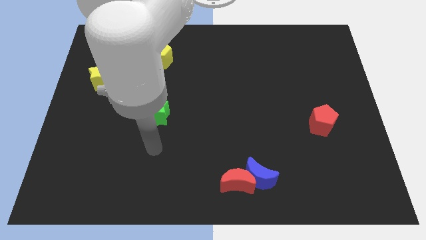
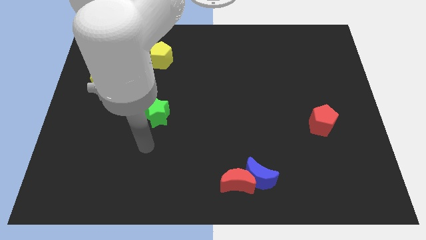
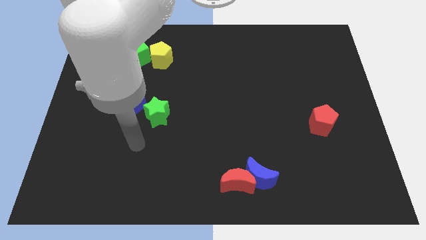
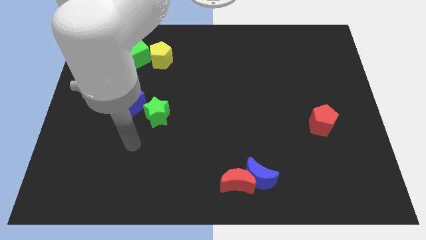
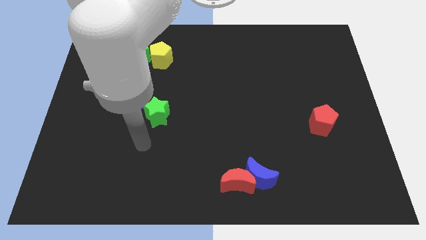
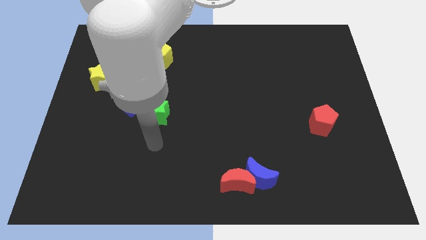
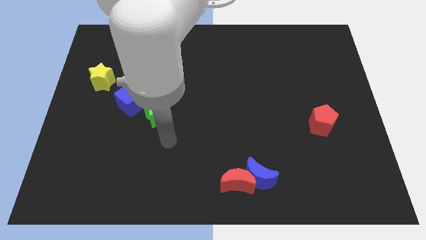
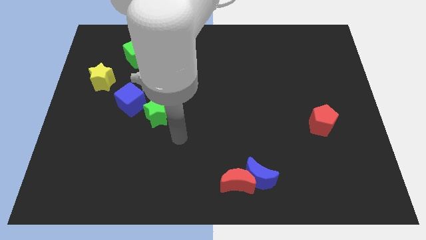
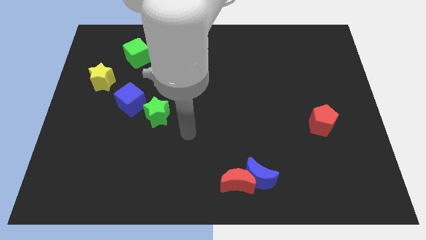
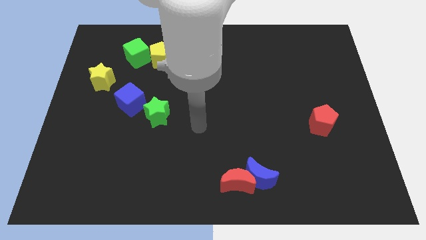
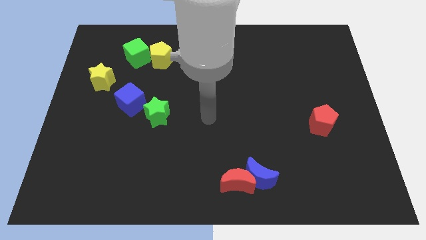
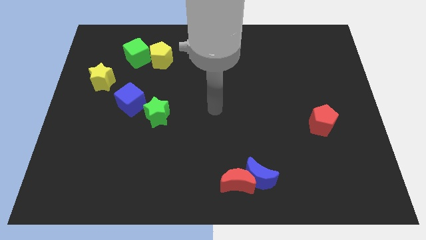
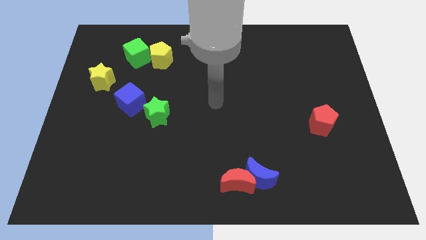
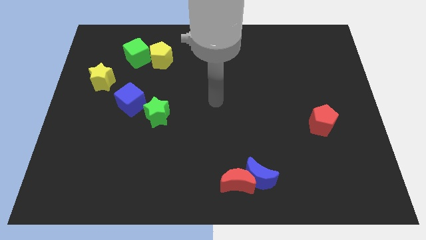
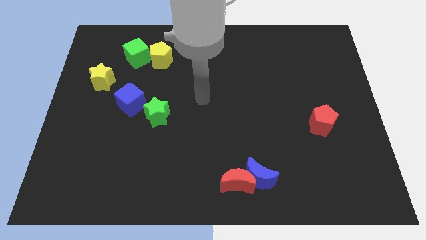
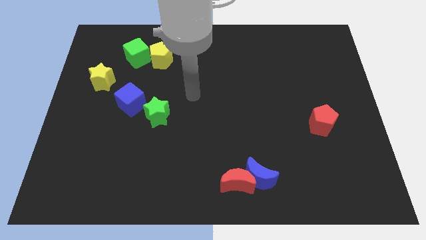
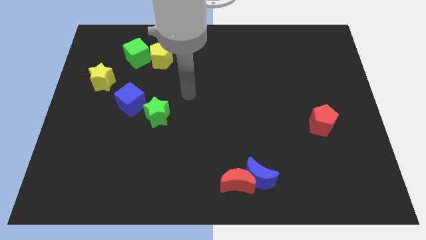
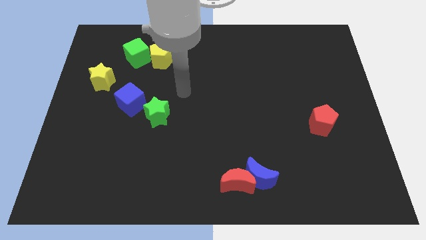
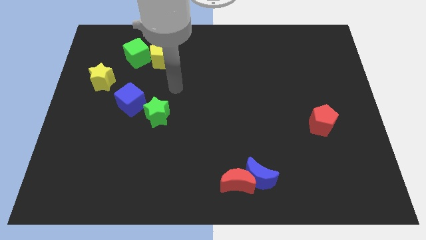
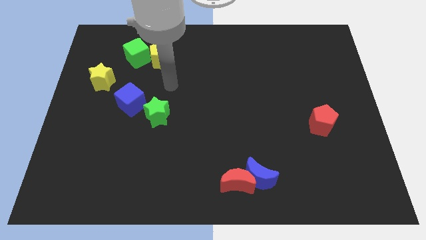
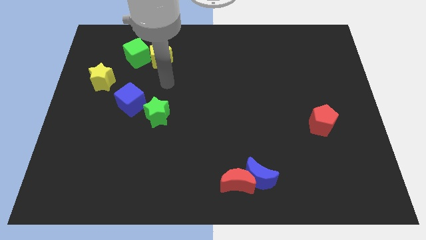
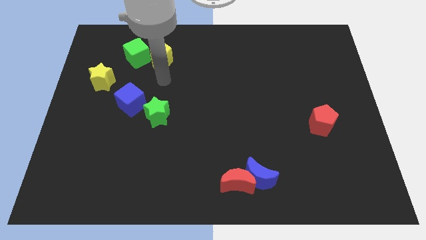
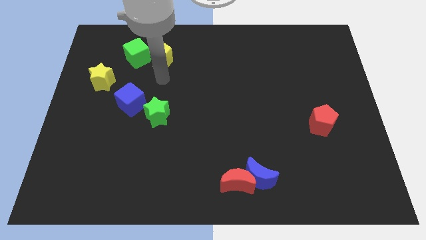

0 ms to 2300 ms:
go near the yellow pentagon

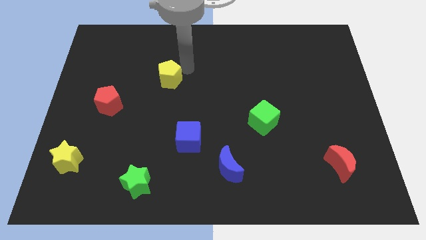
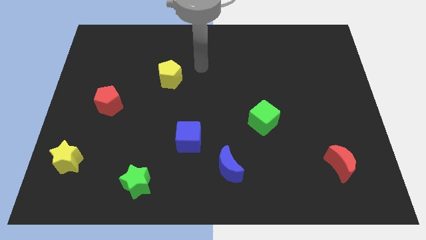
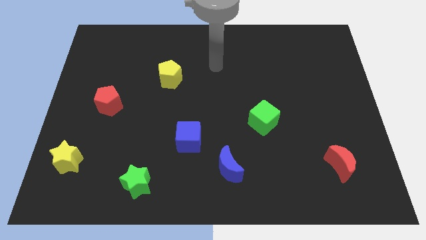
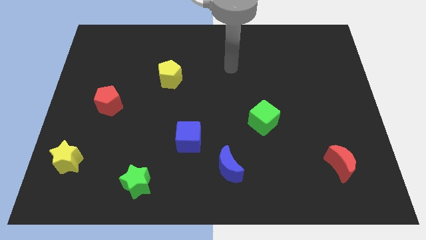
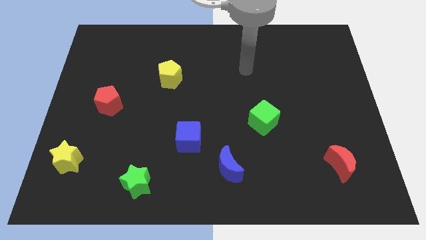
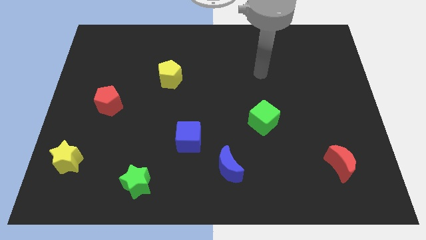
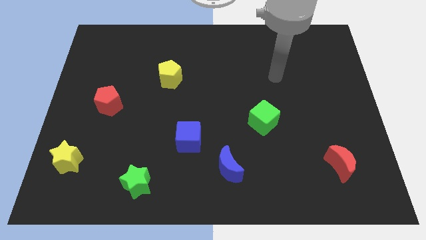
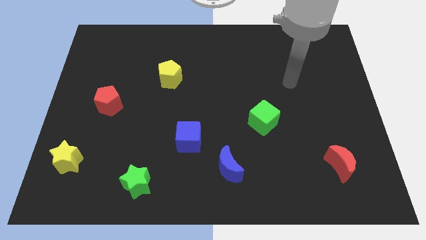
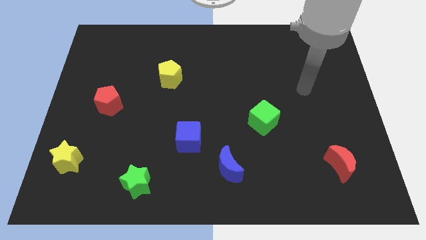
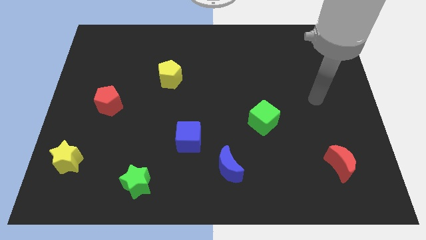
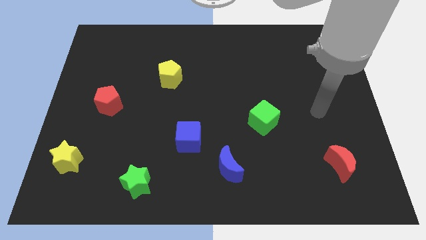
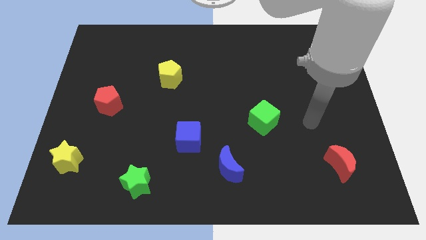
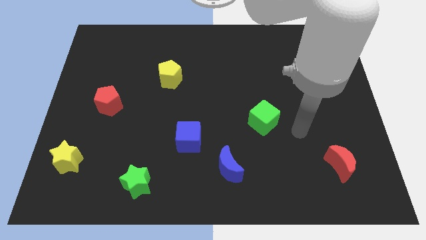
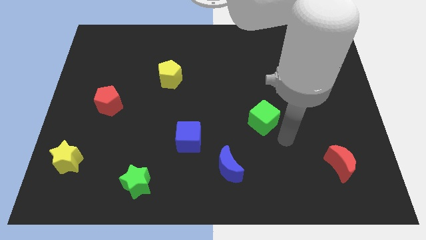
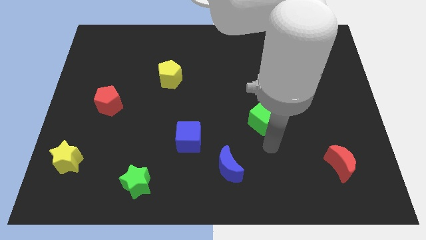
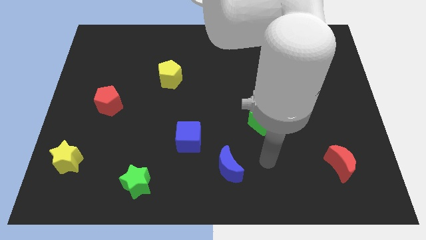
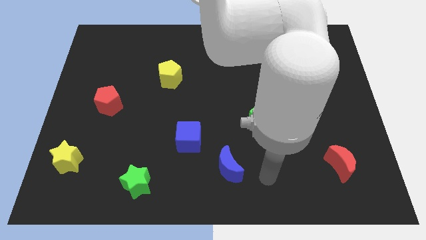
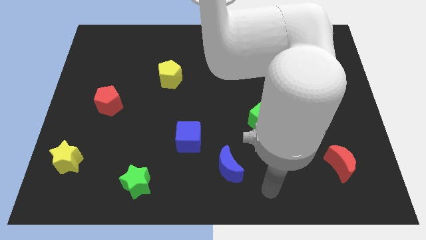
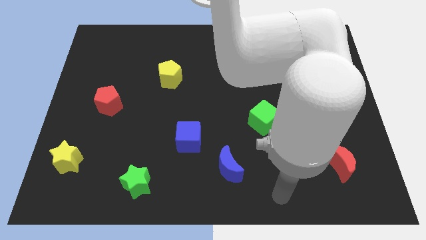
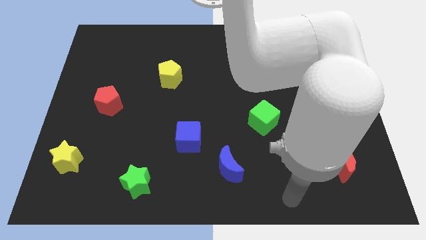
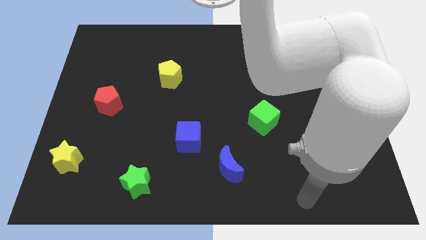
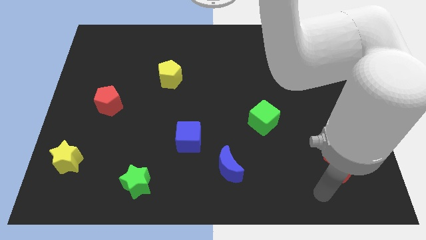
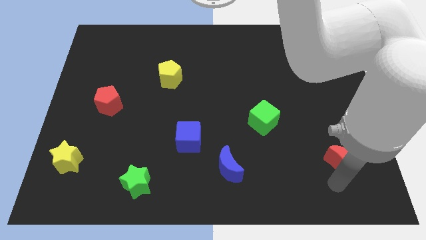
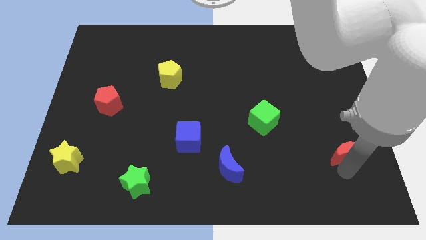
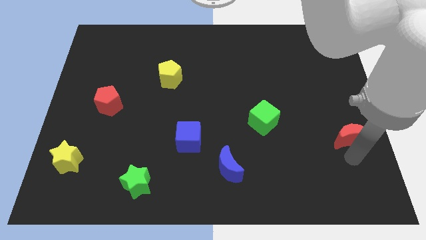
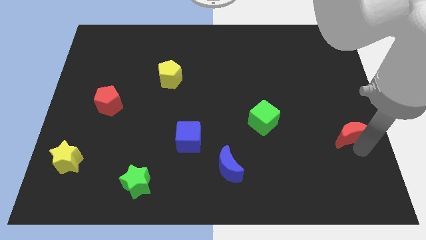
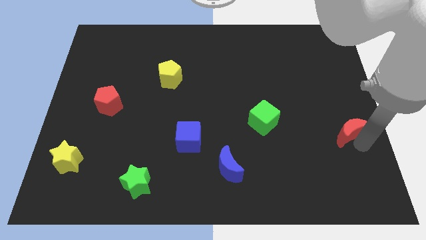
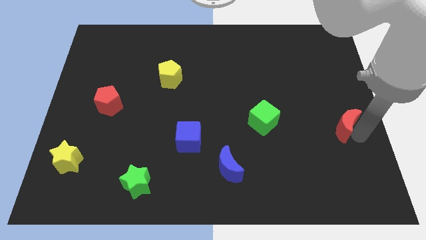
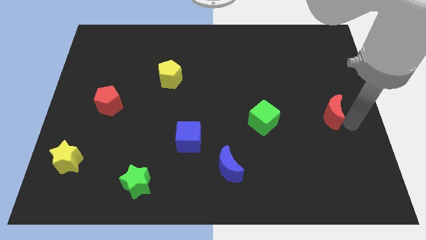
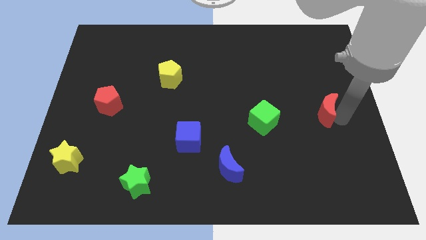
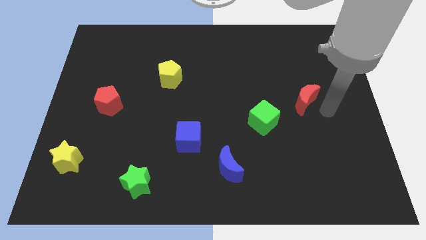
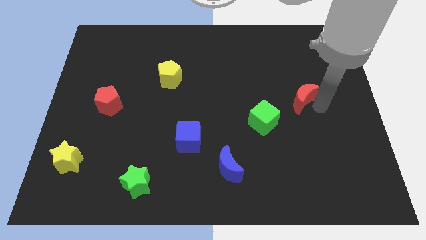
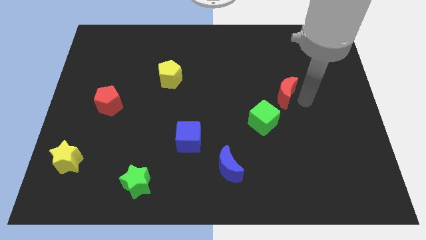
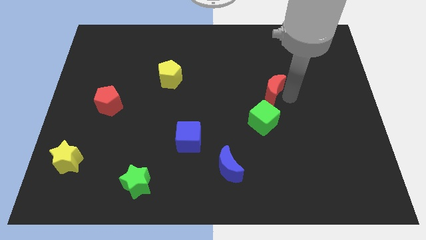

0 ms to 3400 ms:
place the red moon to the top of green cube

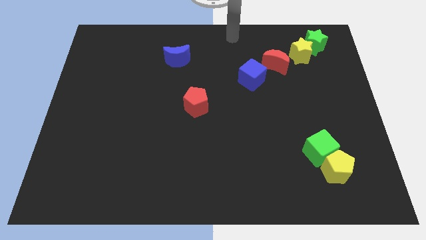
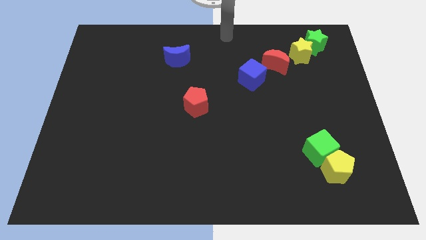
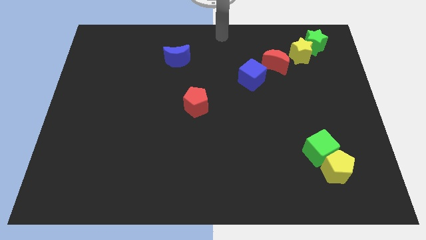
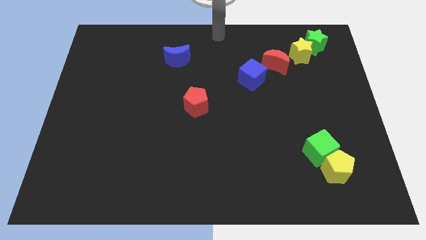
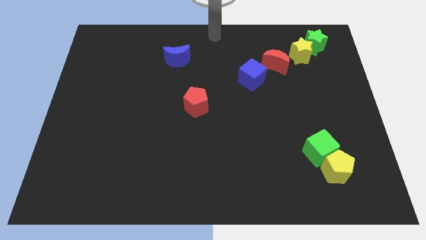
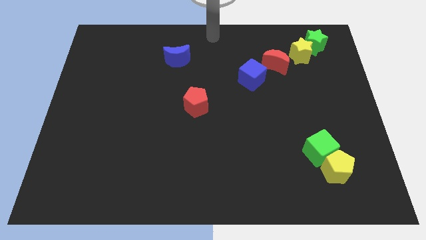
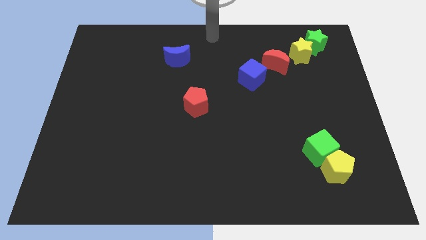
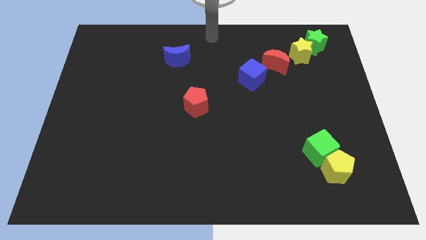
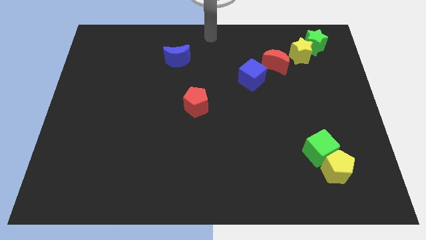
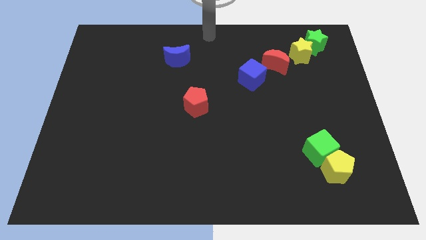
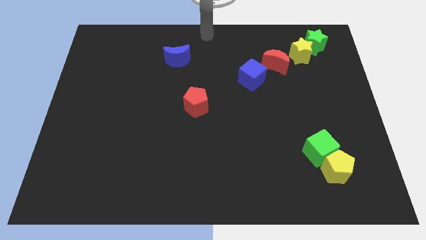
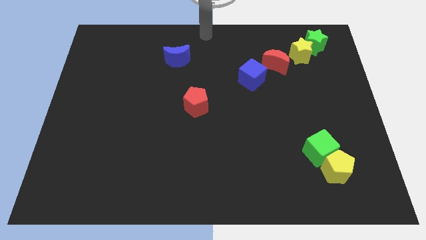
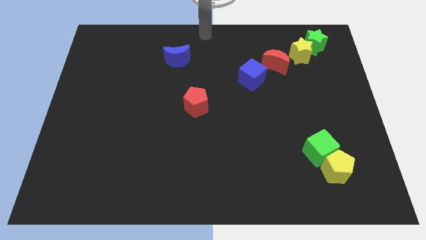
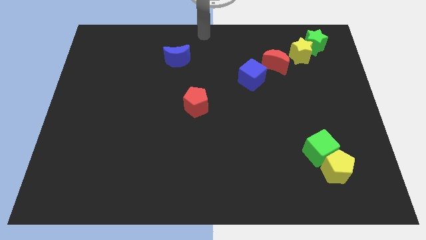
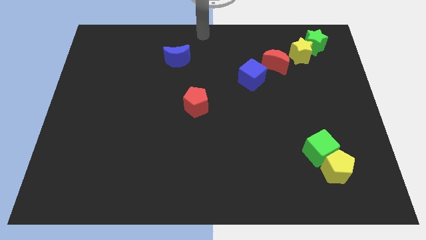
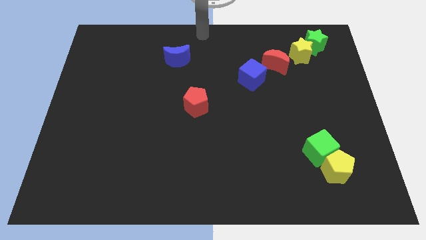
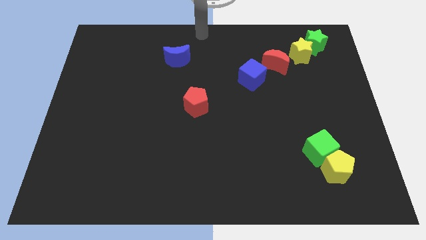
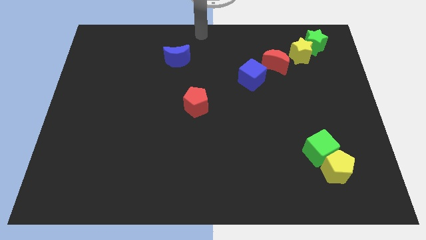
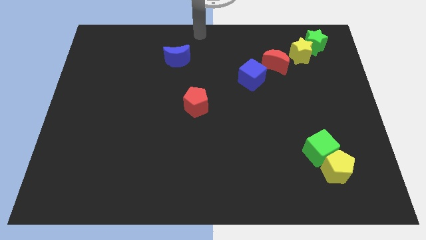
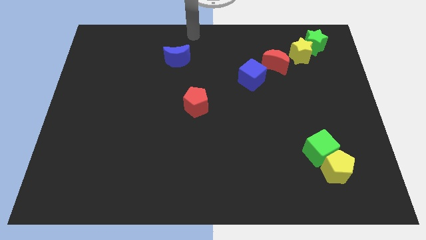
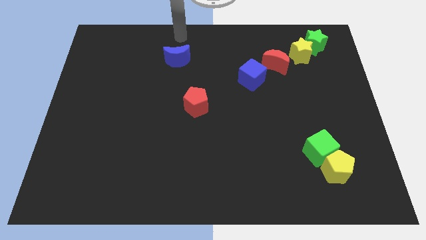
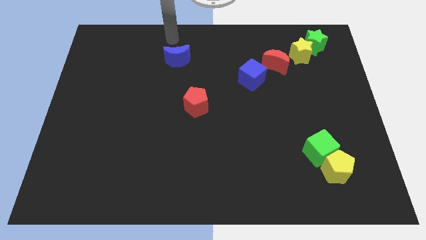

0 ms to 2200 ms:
move your hand vertically above the blue moon

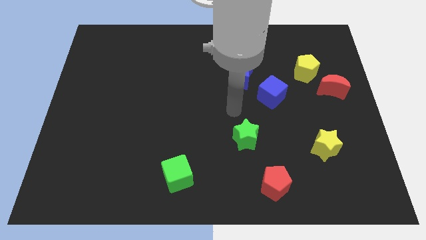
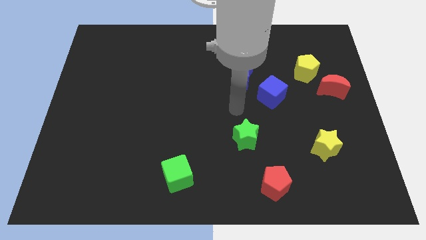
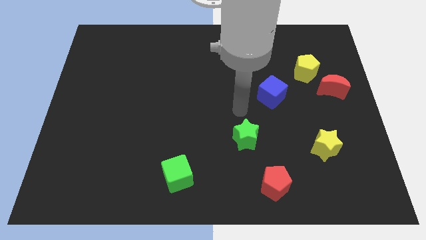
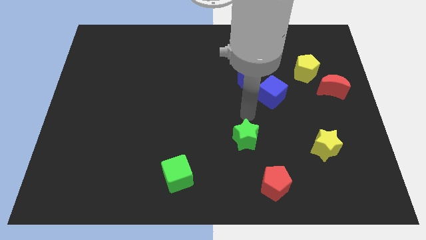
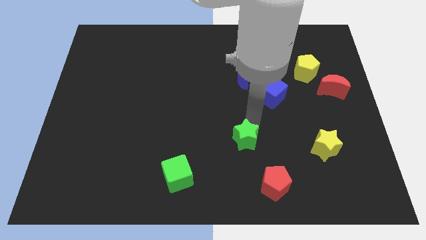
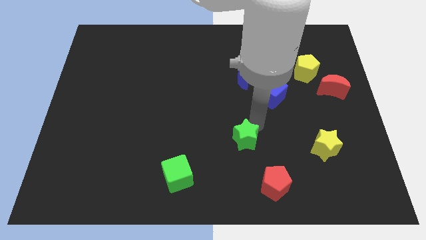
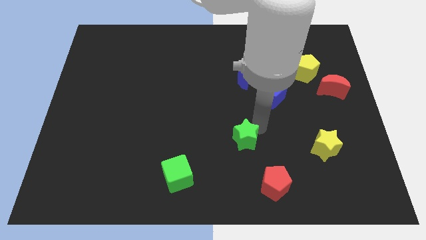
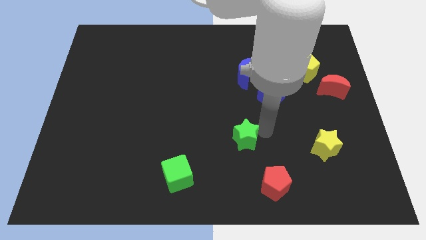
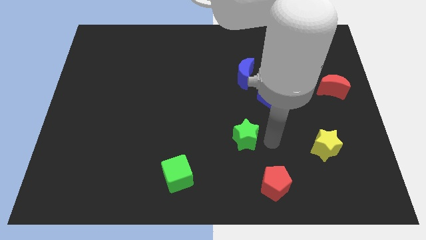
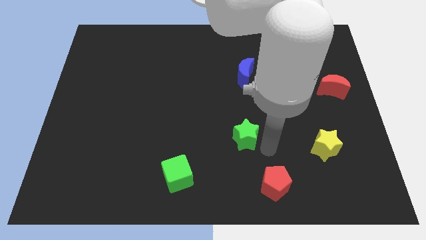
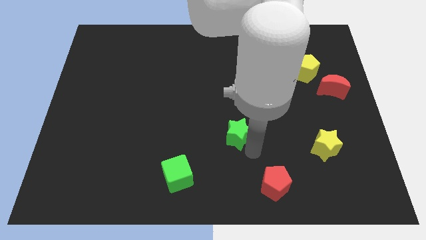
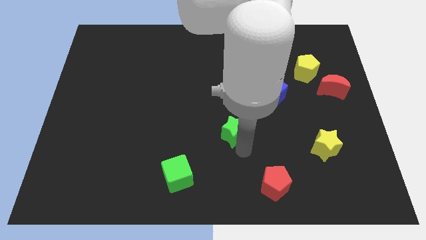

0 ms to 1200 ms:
move the green star slightly towards the left side
